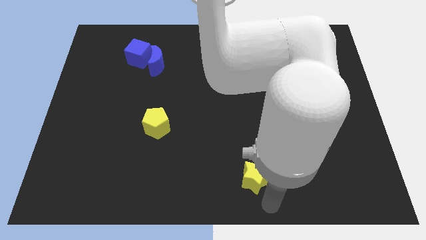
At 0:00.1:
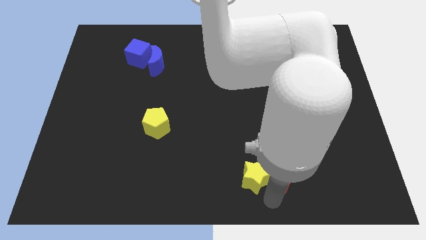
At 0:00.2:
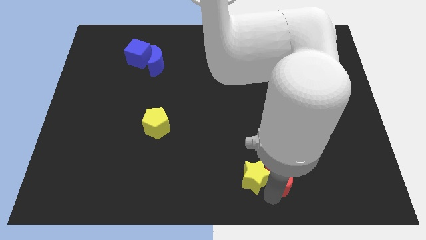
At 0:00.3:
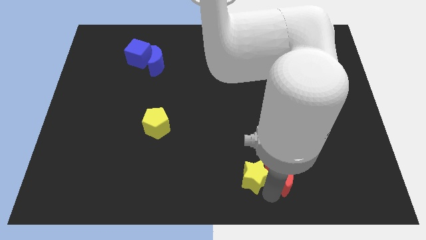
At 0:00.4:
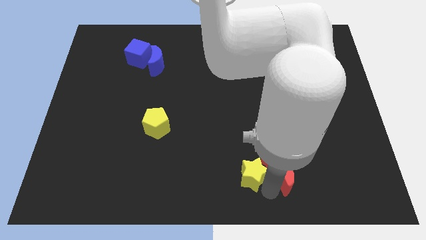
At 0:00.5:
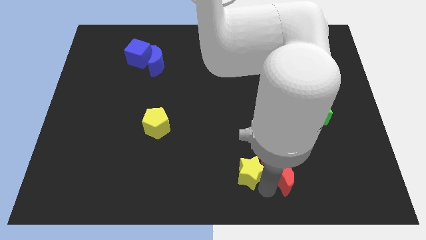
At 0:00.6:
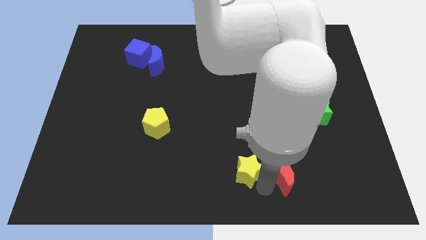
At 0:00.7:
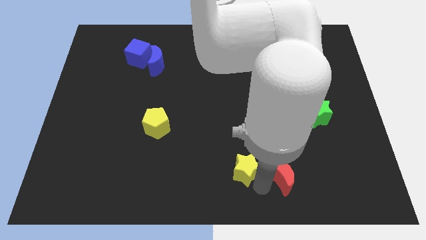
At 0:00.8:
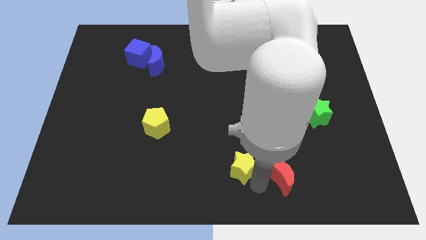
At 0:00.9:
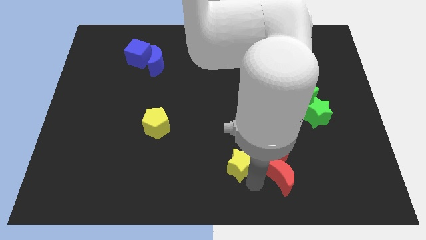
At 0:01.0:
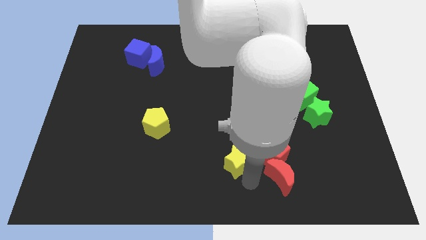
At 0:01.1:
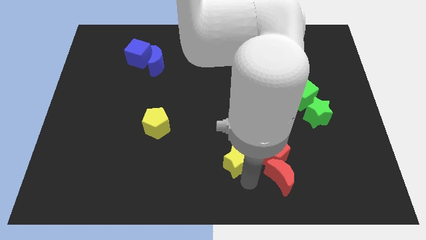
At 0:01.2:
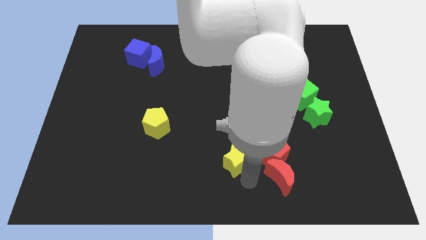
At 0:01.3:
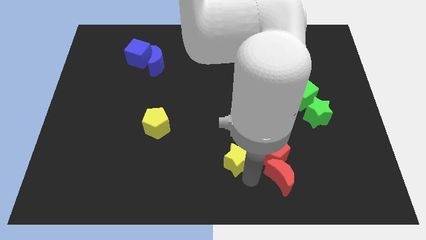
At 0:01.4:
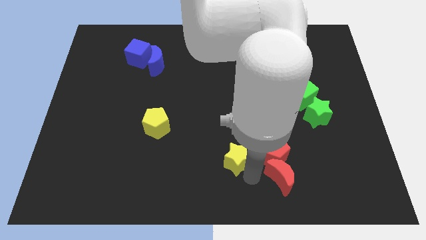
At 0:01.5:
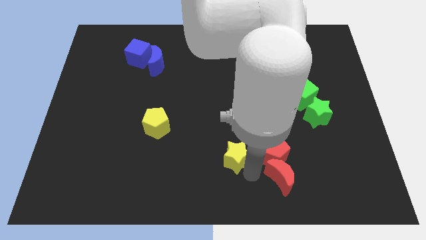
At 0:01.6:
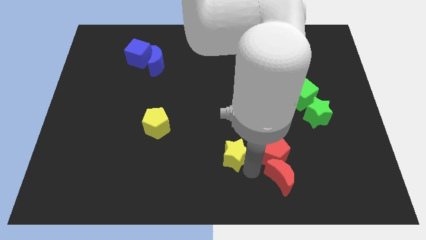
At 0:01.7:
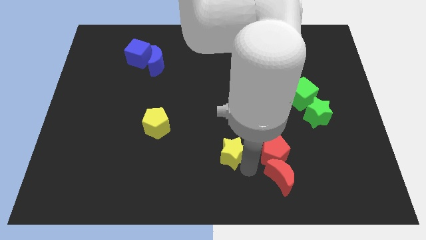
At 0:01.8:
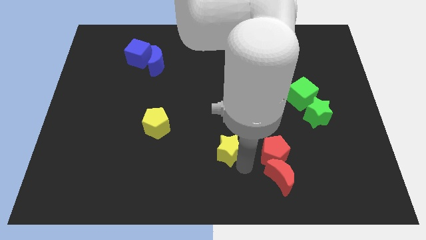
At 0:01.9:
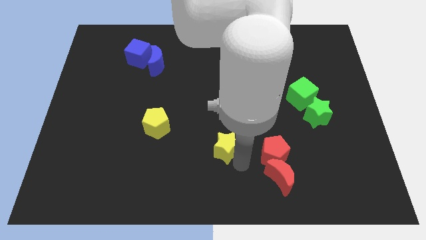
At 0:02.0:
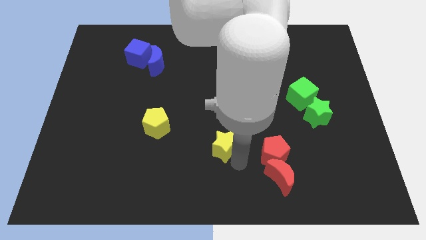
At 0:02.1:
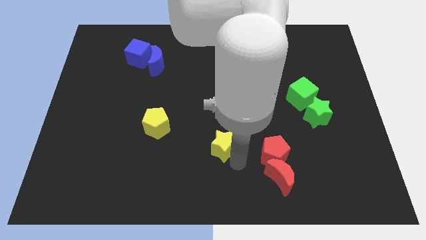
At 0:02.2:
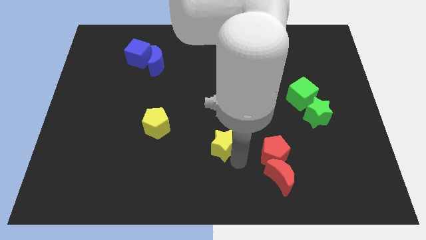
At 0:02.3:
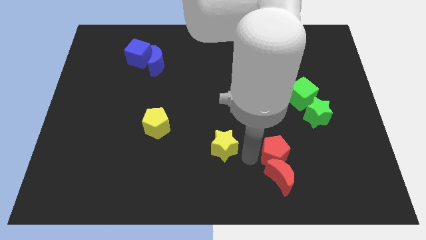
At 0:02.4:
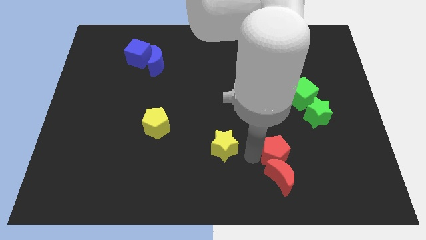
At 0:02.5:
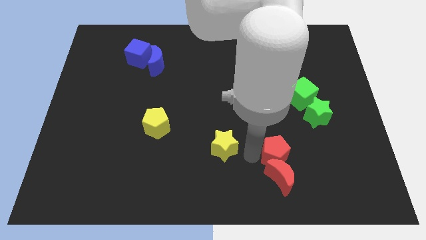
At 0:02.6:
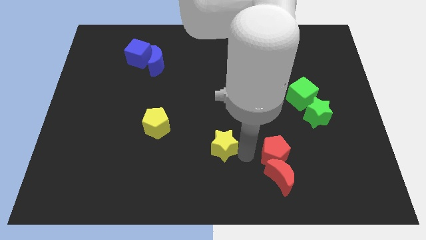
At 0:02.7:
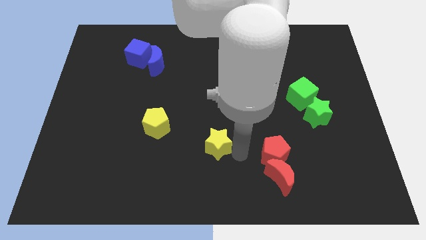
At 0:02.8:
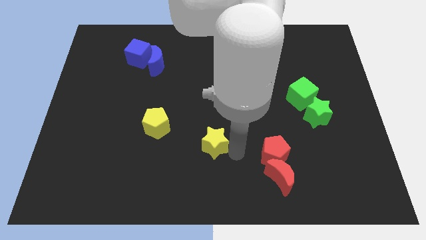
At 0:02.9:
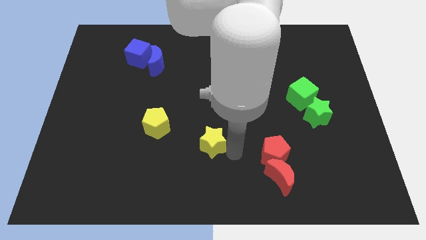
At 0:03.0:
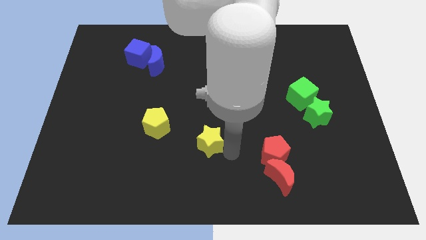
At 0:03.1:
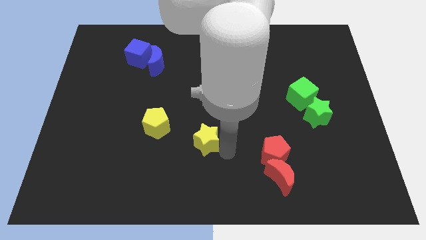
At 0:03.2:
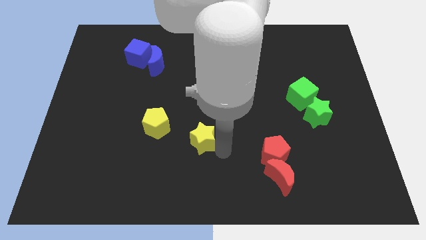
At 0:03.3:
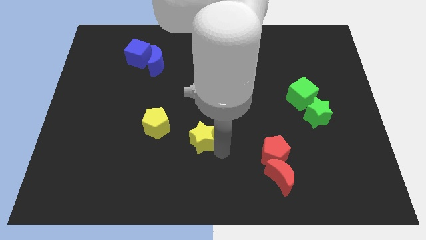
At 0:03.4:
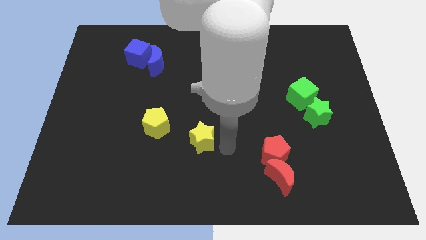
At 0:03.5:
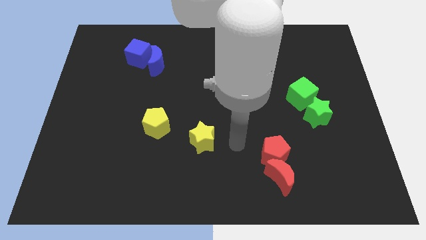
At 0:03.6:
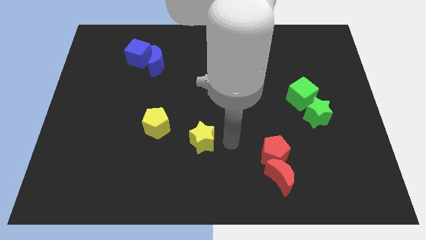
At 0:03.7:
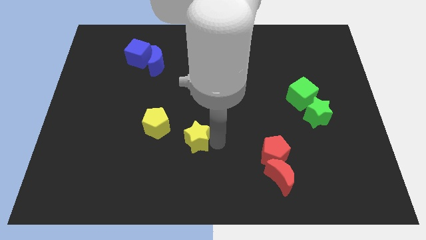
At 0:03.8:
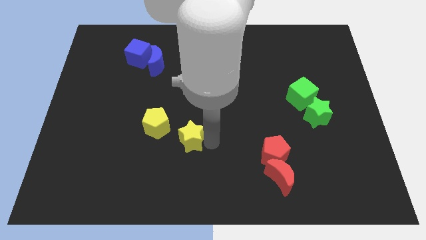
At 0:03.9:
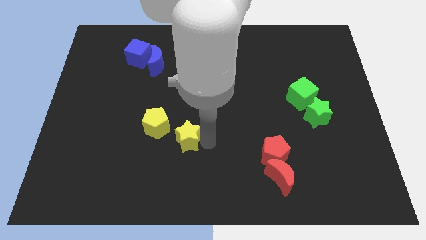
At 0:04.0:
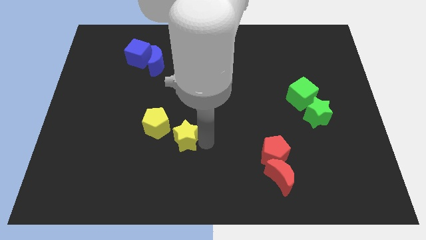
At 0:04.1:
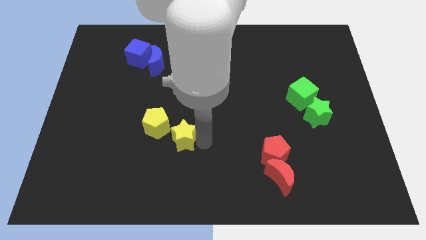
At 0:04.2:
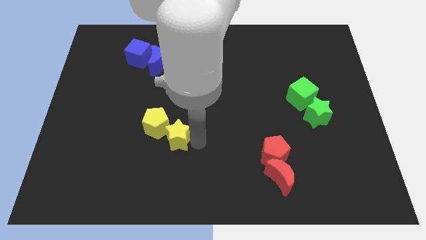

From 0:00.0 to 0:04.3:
slide the yellow star towards the right side of the yellow pentagon

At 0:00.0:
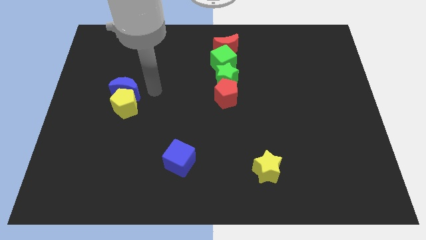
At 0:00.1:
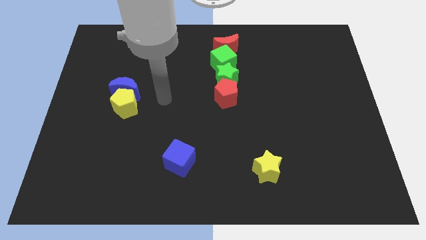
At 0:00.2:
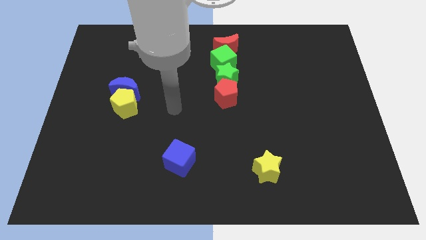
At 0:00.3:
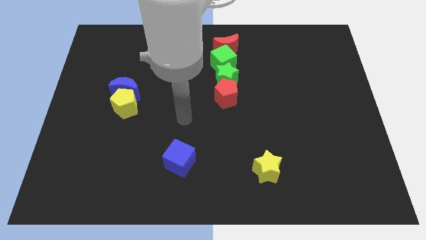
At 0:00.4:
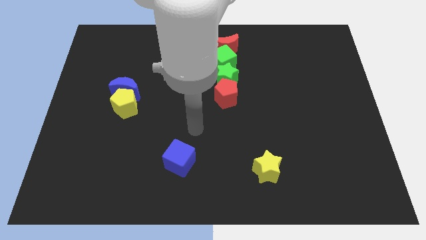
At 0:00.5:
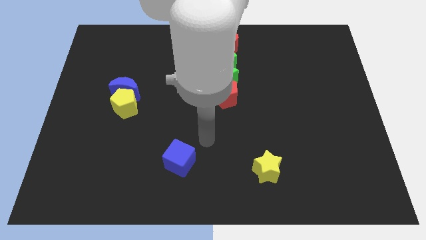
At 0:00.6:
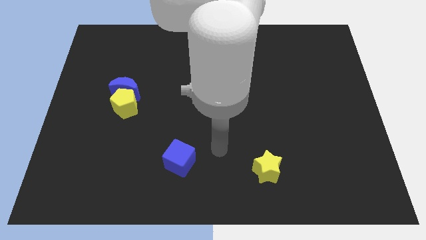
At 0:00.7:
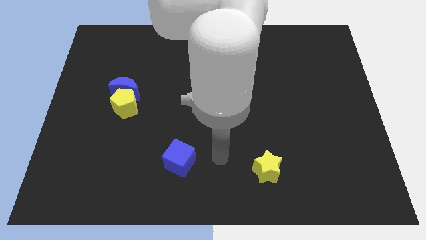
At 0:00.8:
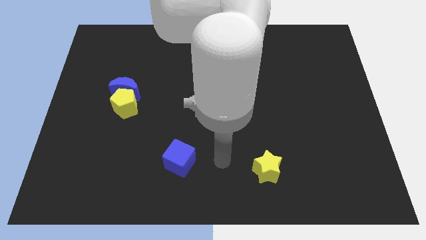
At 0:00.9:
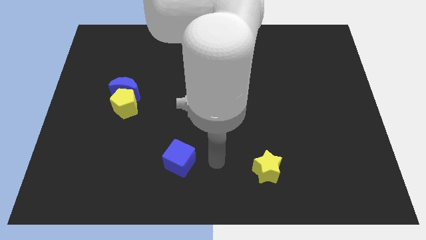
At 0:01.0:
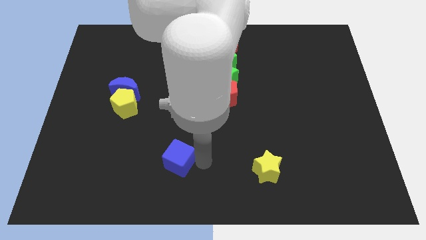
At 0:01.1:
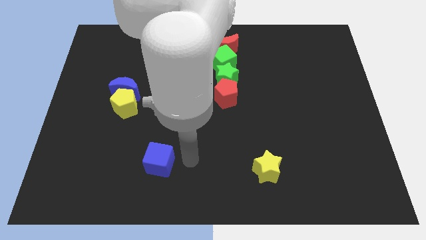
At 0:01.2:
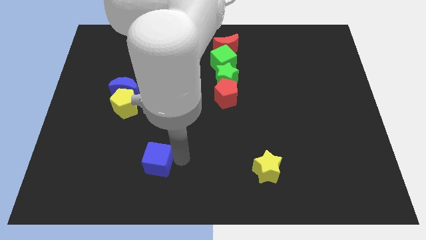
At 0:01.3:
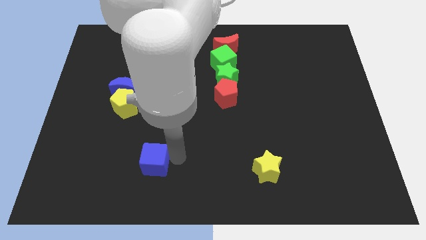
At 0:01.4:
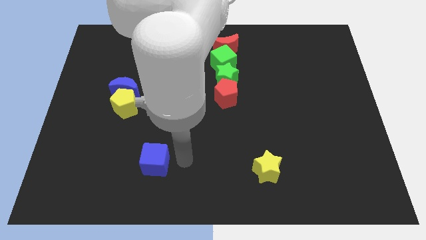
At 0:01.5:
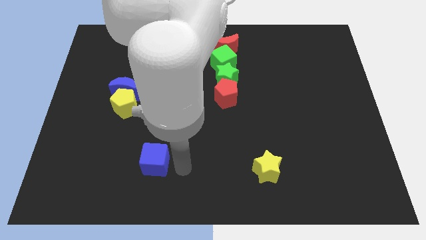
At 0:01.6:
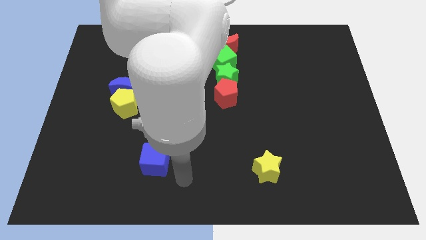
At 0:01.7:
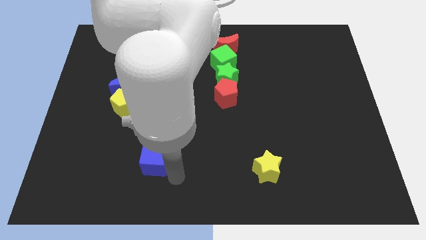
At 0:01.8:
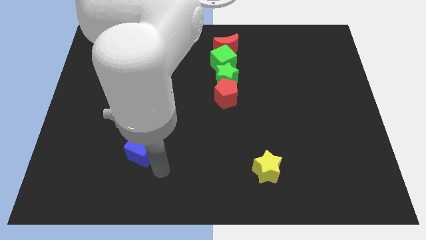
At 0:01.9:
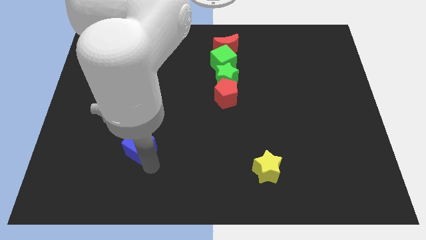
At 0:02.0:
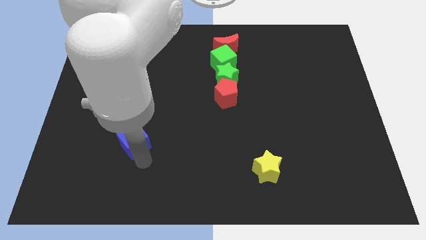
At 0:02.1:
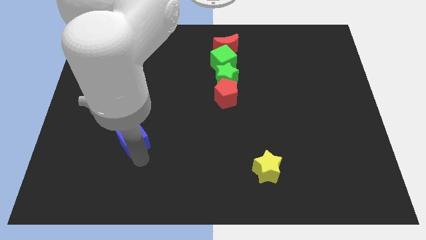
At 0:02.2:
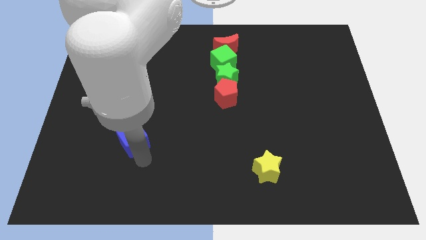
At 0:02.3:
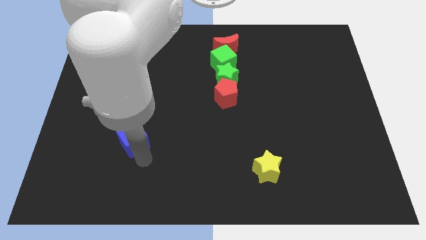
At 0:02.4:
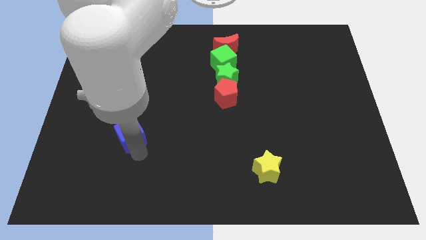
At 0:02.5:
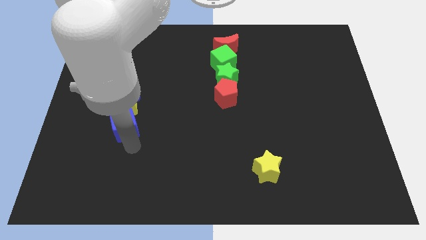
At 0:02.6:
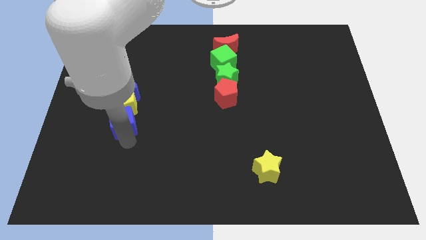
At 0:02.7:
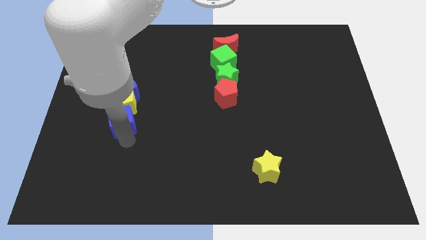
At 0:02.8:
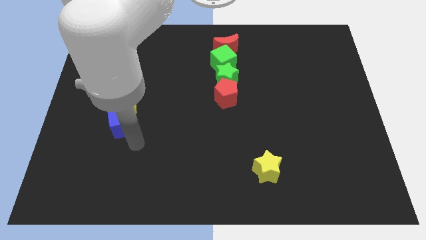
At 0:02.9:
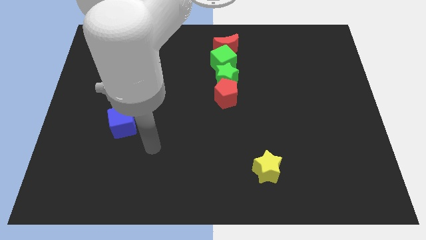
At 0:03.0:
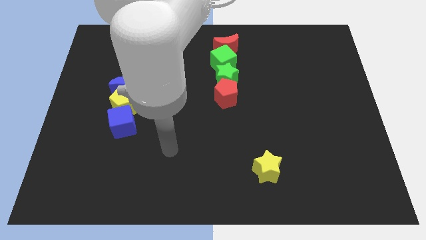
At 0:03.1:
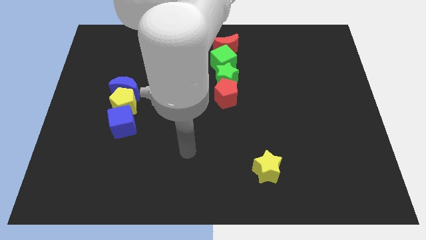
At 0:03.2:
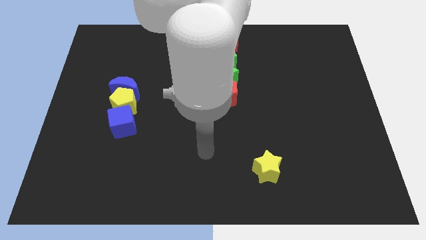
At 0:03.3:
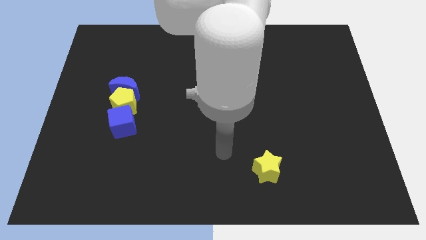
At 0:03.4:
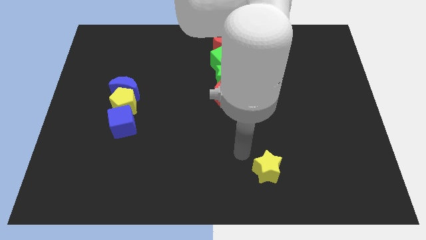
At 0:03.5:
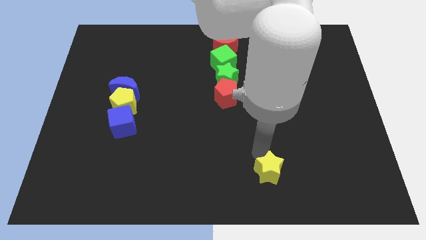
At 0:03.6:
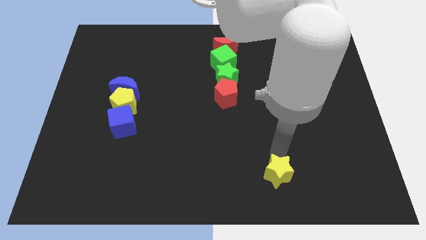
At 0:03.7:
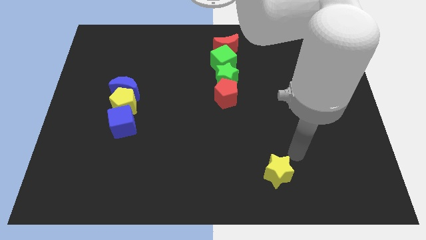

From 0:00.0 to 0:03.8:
move the blue cube to the bottom of yellow pentagon

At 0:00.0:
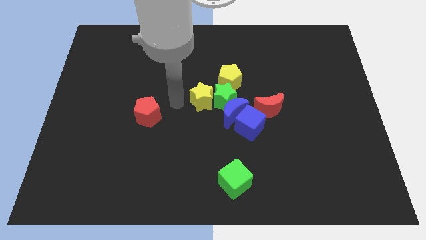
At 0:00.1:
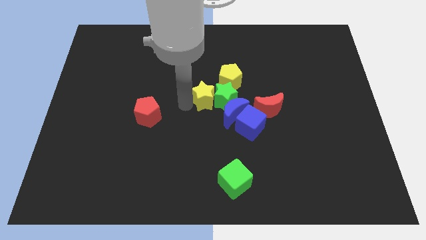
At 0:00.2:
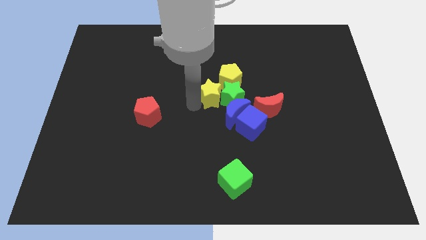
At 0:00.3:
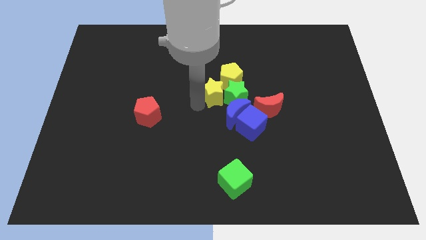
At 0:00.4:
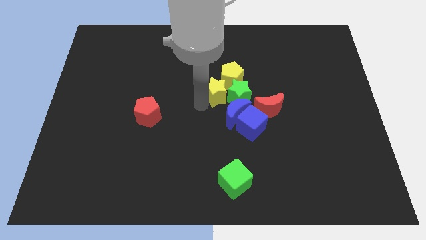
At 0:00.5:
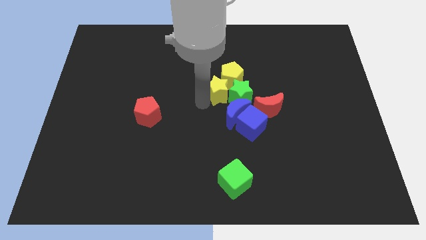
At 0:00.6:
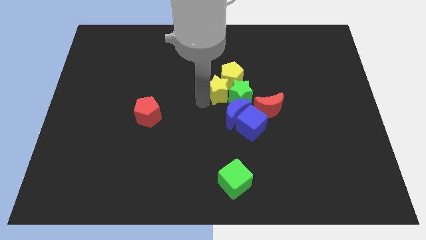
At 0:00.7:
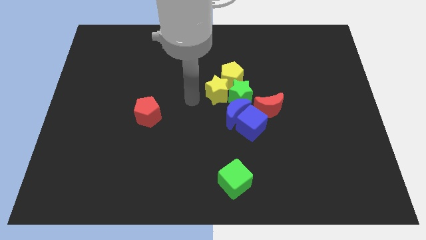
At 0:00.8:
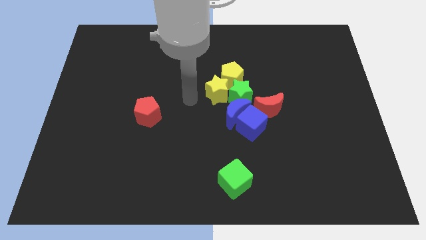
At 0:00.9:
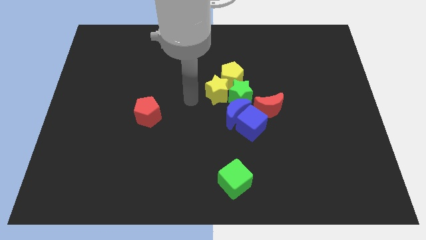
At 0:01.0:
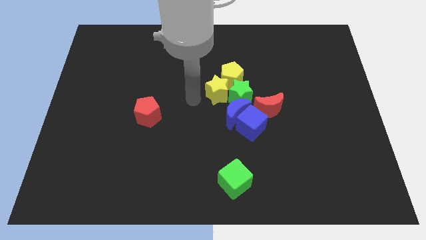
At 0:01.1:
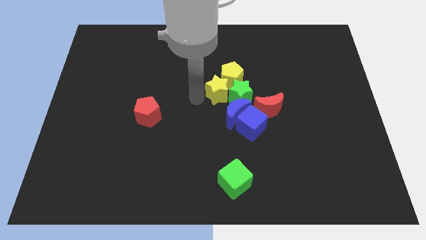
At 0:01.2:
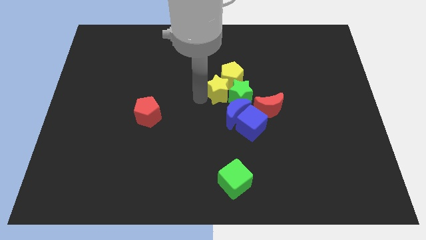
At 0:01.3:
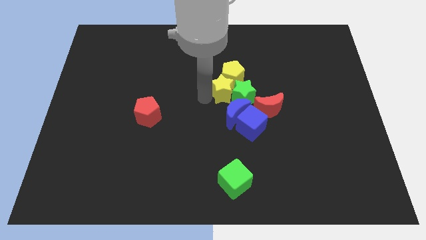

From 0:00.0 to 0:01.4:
push the green and yellow star into the group of blocks
